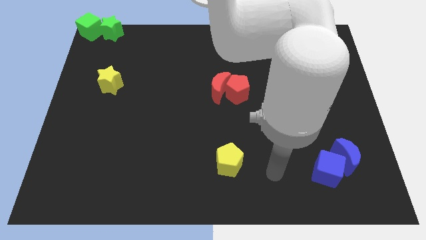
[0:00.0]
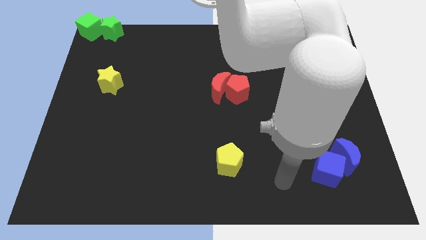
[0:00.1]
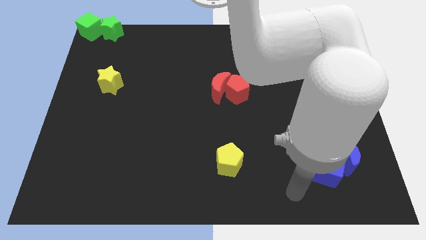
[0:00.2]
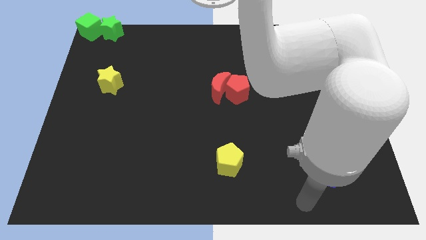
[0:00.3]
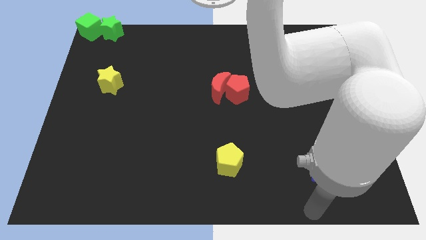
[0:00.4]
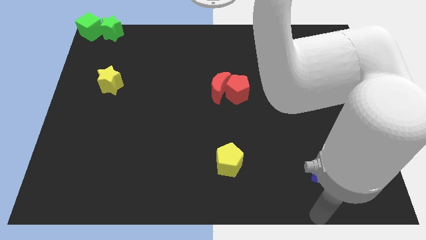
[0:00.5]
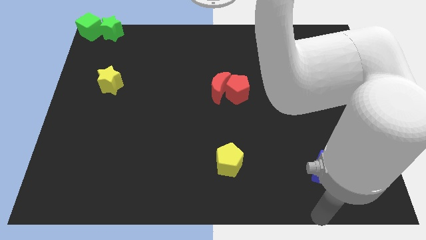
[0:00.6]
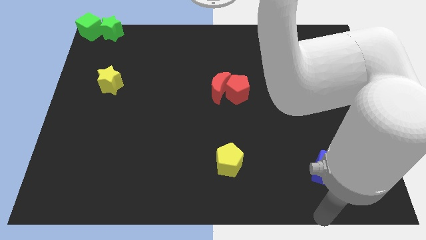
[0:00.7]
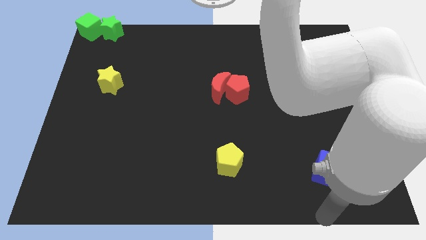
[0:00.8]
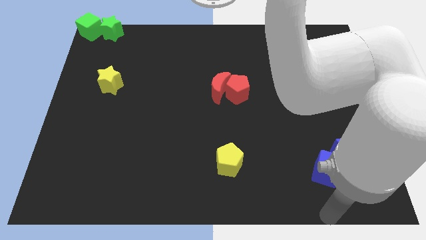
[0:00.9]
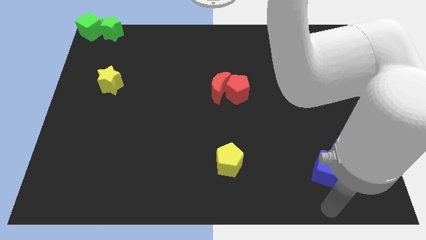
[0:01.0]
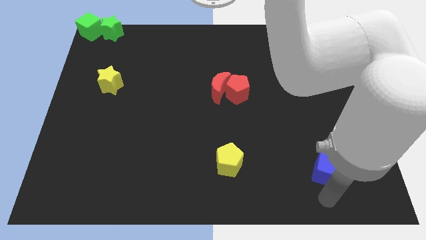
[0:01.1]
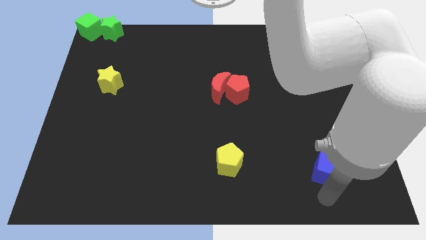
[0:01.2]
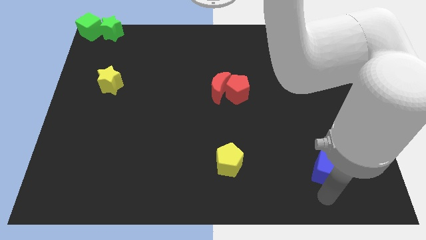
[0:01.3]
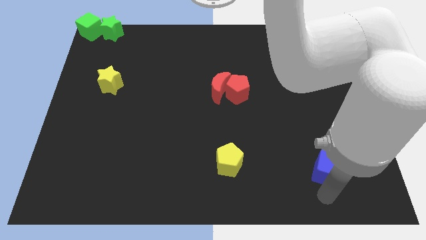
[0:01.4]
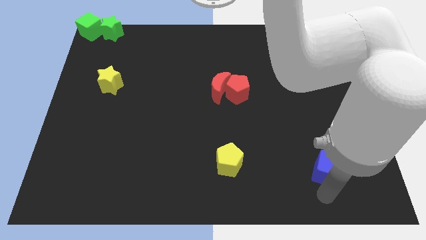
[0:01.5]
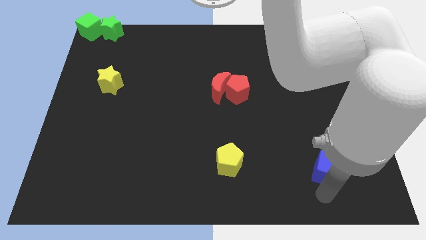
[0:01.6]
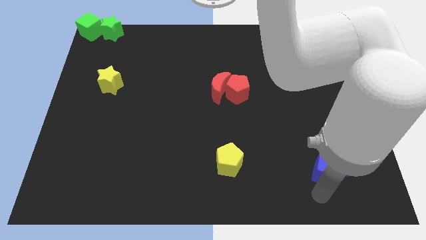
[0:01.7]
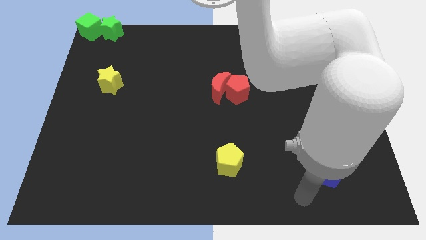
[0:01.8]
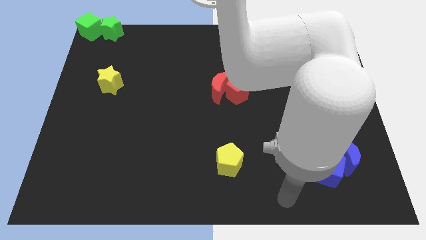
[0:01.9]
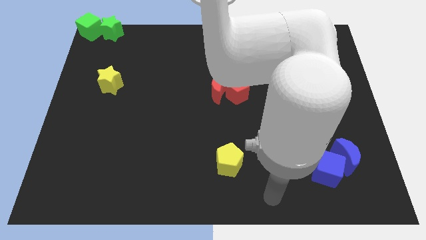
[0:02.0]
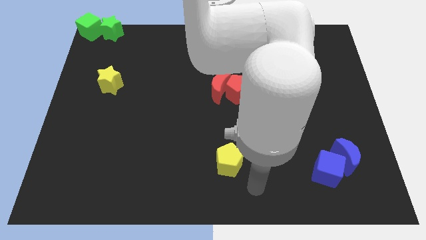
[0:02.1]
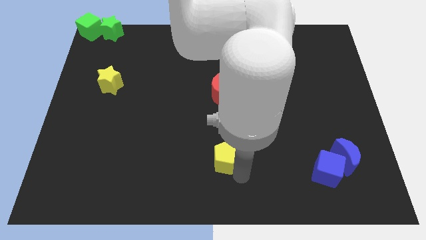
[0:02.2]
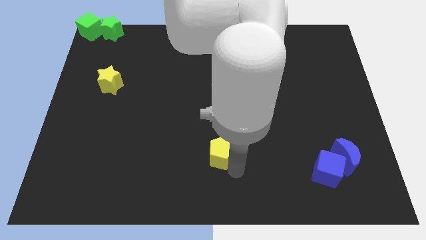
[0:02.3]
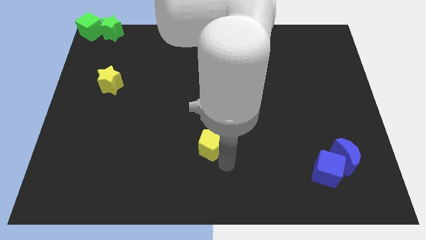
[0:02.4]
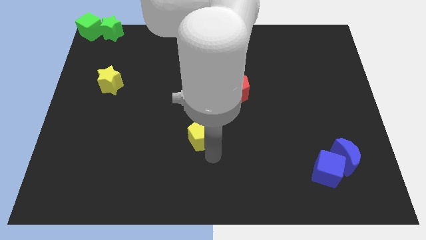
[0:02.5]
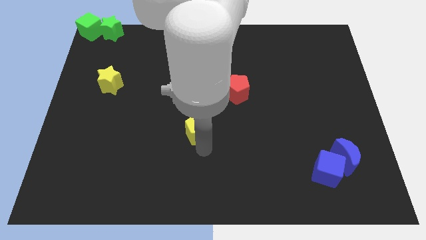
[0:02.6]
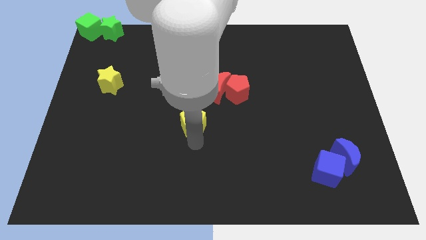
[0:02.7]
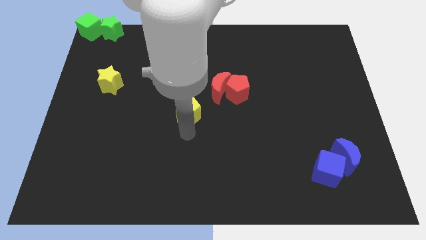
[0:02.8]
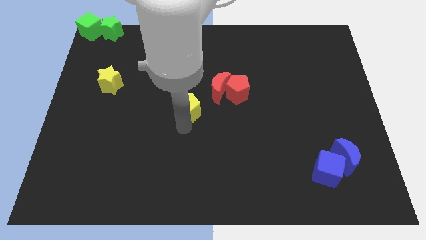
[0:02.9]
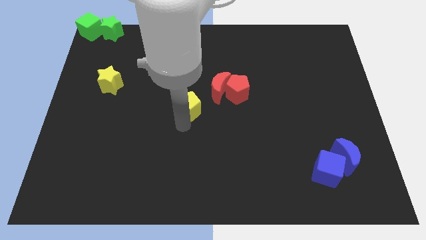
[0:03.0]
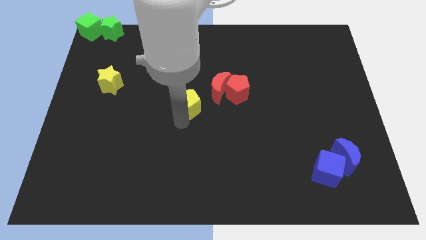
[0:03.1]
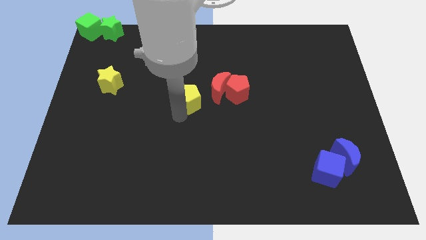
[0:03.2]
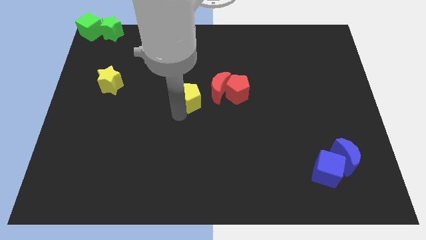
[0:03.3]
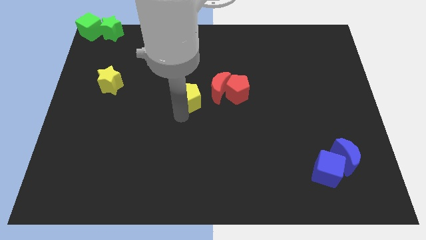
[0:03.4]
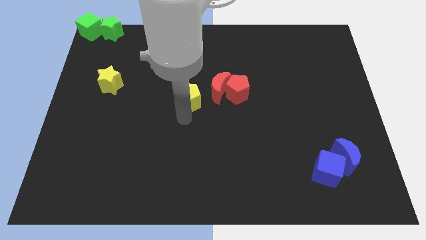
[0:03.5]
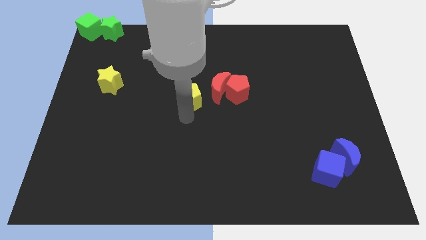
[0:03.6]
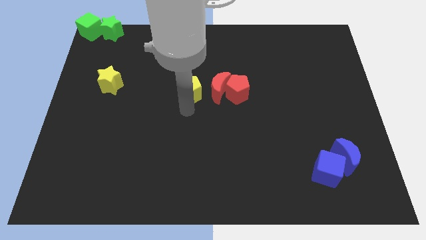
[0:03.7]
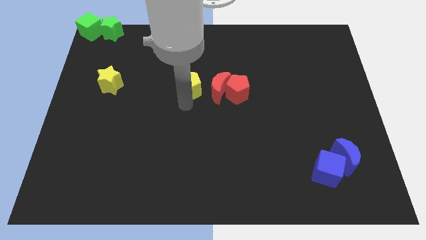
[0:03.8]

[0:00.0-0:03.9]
slide the yellow pentagon to the left side of the red crescent

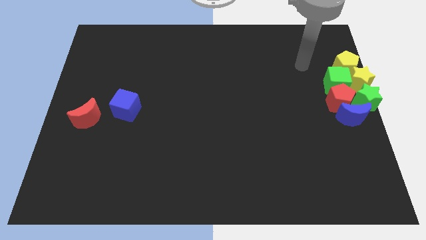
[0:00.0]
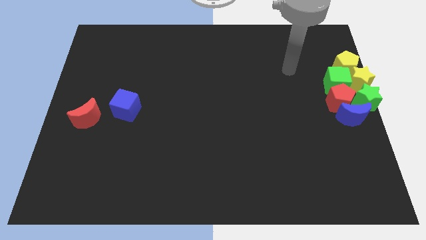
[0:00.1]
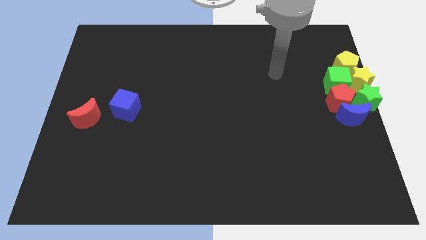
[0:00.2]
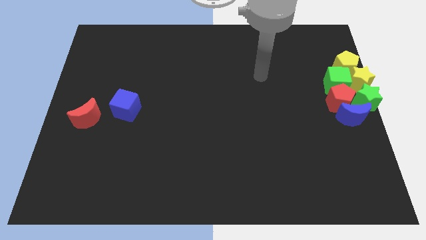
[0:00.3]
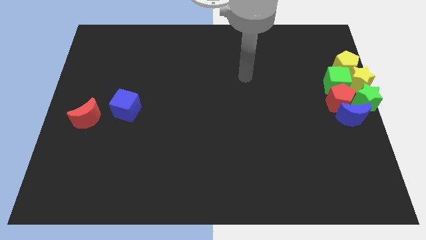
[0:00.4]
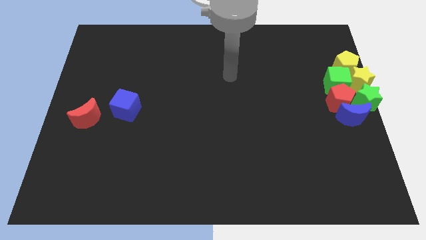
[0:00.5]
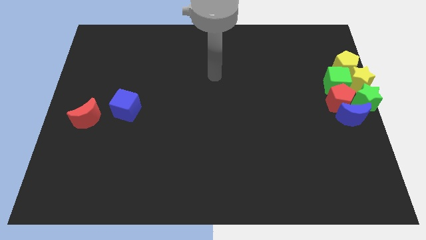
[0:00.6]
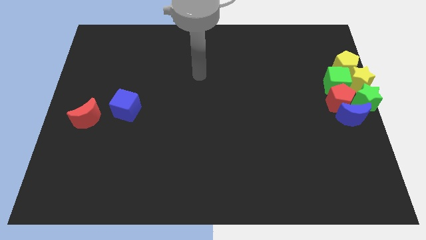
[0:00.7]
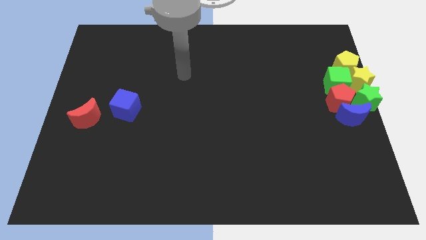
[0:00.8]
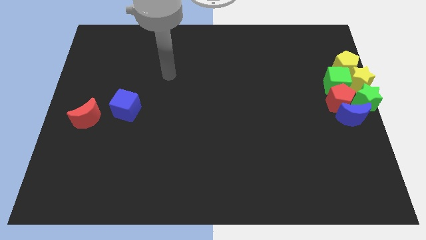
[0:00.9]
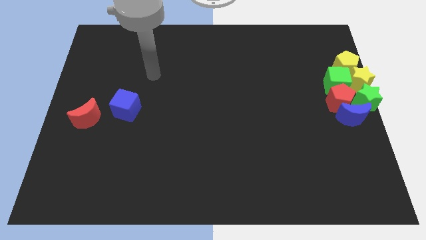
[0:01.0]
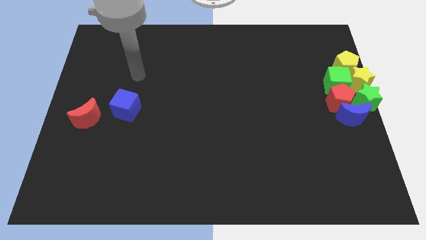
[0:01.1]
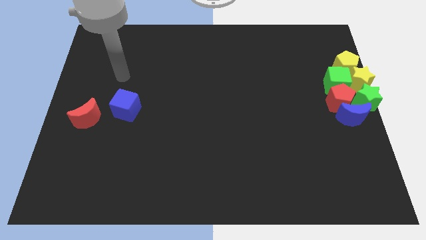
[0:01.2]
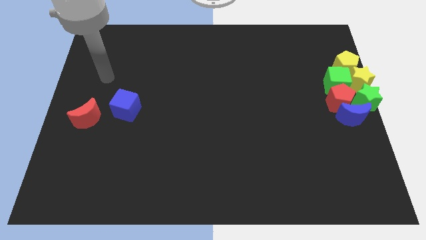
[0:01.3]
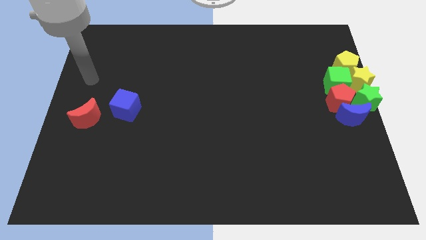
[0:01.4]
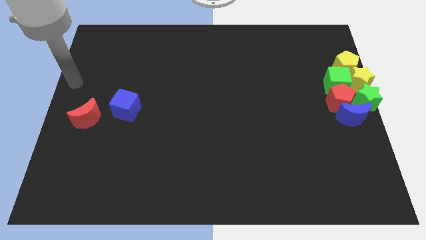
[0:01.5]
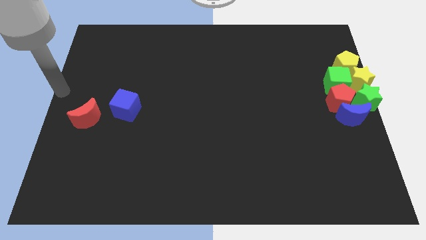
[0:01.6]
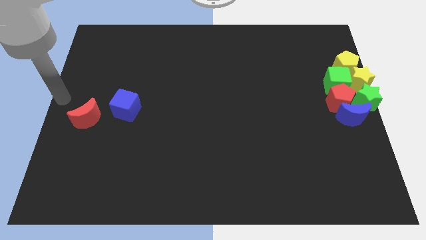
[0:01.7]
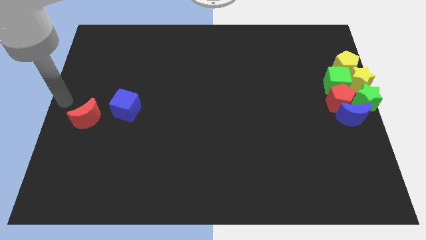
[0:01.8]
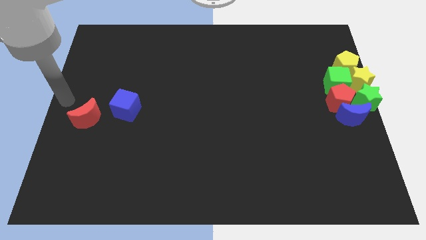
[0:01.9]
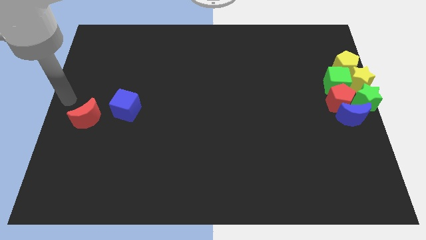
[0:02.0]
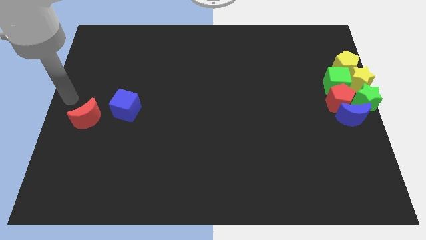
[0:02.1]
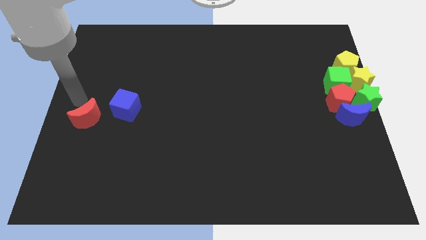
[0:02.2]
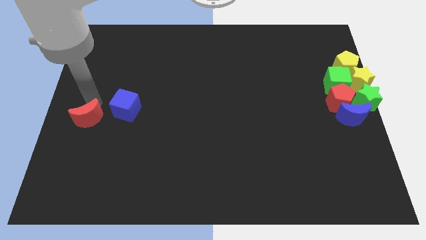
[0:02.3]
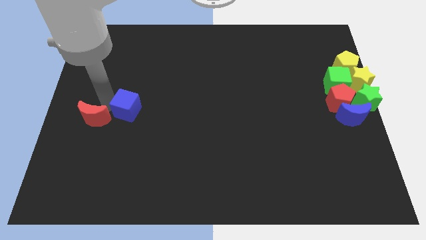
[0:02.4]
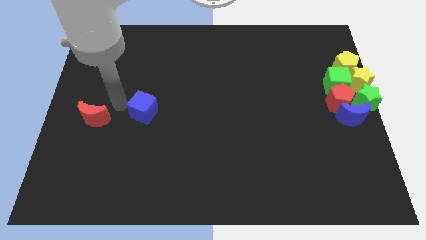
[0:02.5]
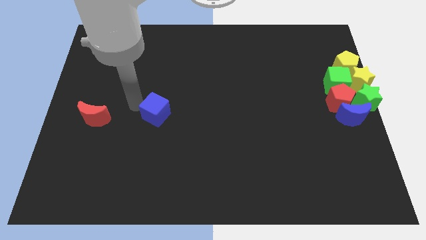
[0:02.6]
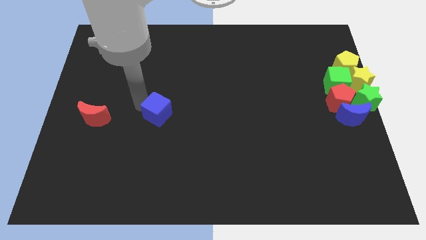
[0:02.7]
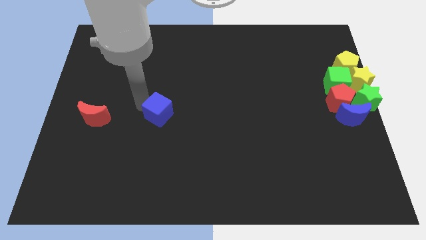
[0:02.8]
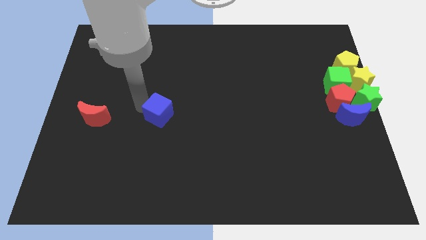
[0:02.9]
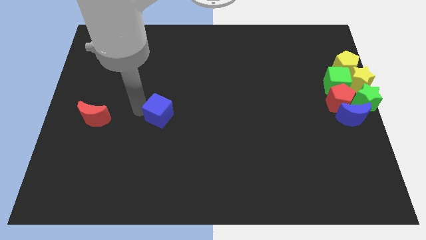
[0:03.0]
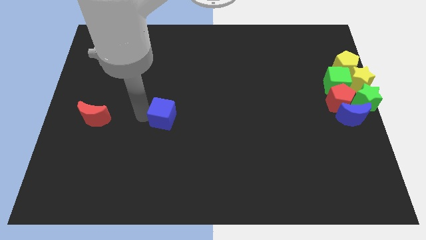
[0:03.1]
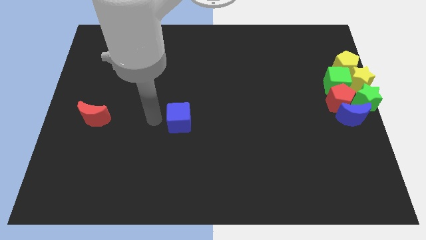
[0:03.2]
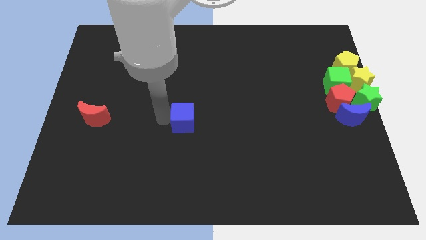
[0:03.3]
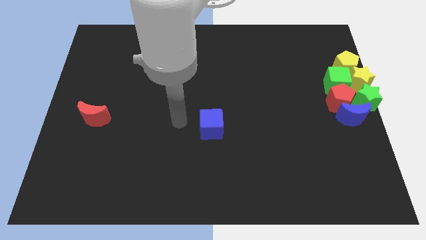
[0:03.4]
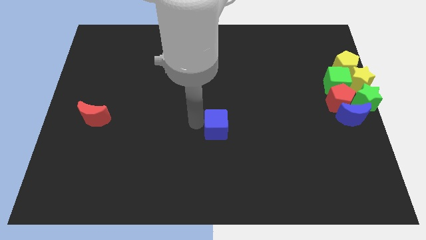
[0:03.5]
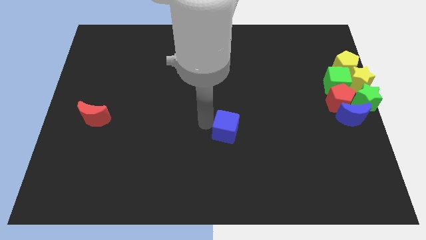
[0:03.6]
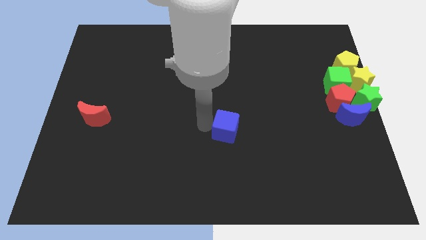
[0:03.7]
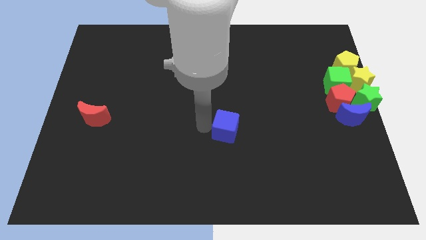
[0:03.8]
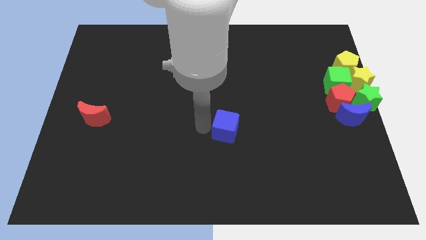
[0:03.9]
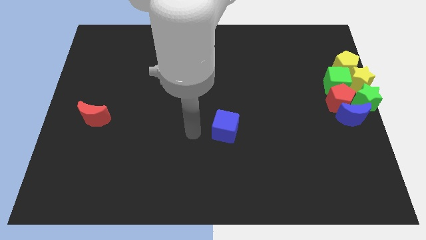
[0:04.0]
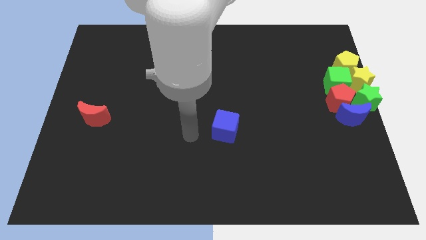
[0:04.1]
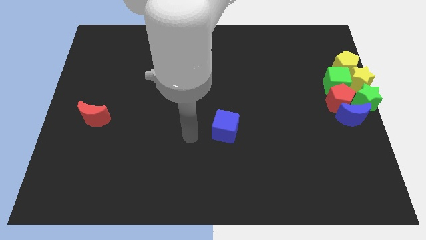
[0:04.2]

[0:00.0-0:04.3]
move the blue cube towards the center of the board

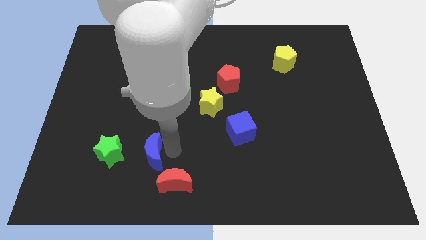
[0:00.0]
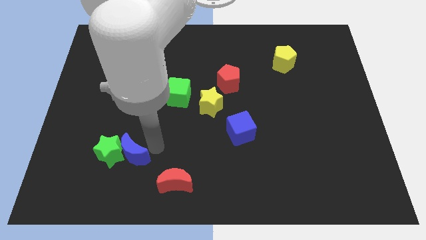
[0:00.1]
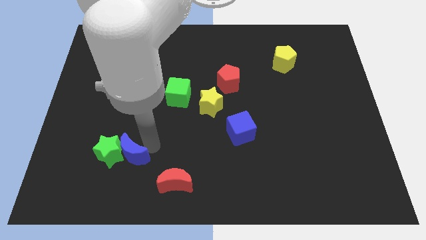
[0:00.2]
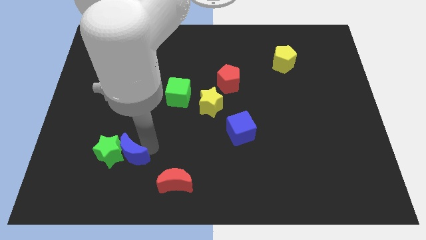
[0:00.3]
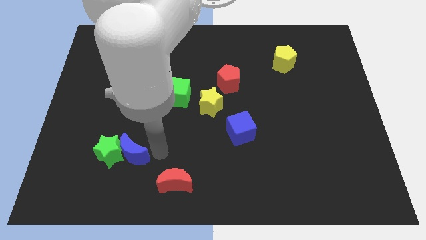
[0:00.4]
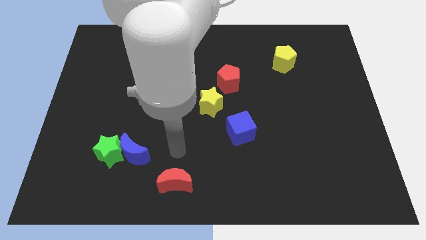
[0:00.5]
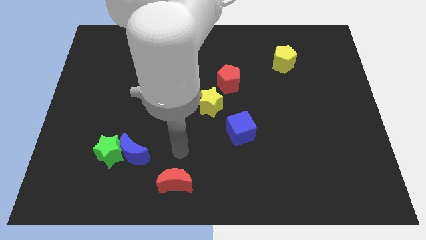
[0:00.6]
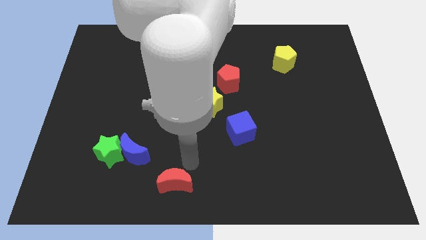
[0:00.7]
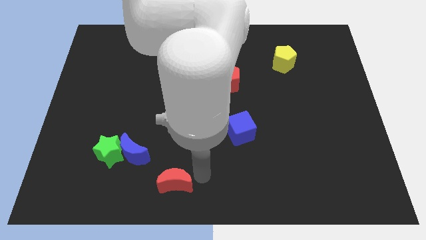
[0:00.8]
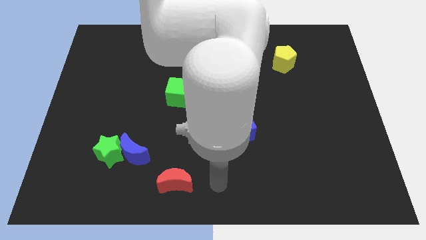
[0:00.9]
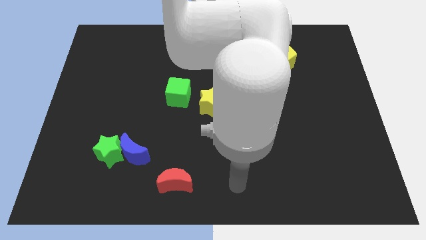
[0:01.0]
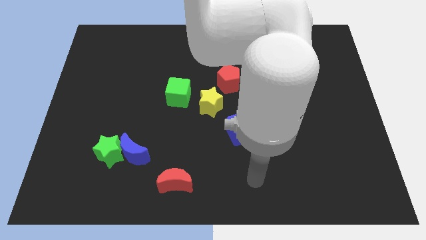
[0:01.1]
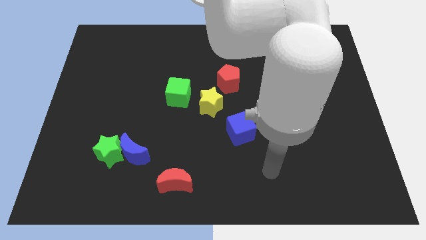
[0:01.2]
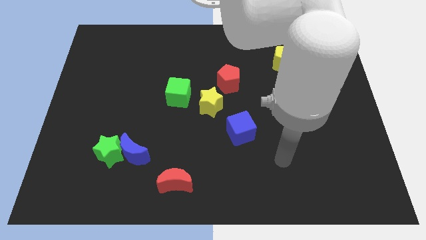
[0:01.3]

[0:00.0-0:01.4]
push the blue moon to the right of the green star
